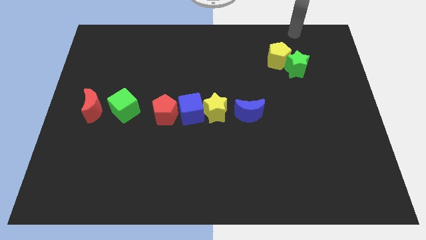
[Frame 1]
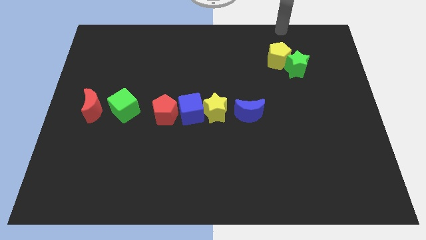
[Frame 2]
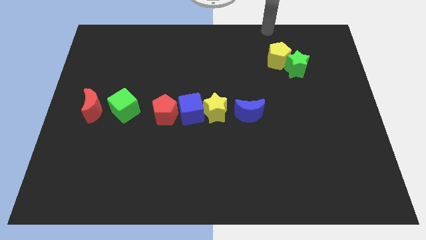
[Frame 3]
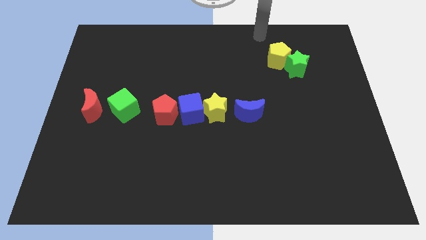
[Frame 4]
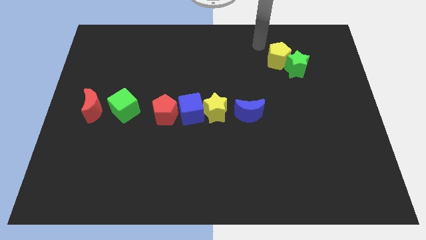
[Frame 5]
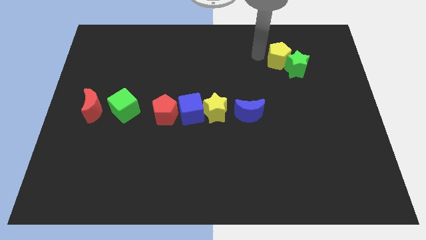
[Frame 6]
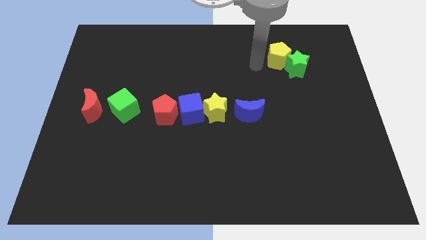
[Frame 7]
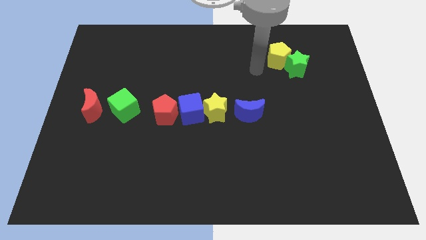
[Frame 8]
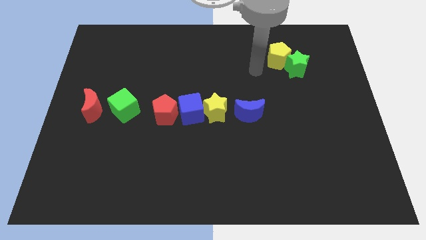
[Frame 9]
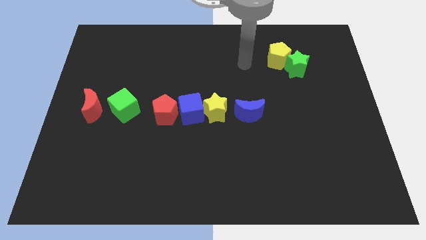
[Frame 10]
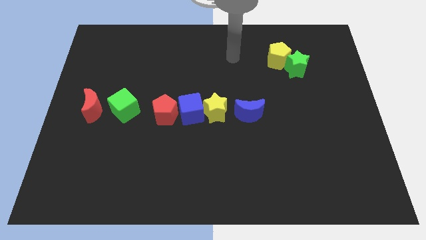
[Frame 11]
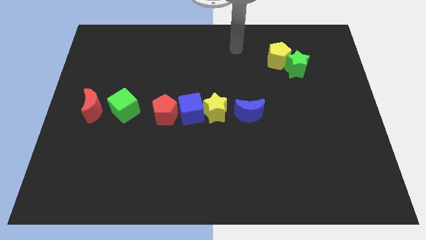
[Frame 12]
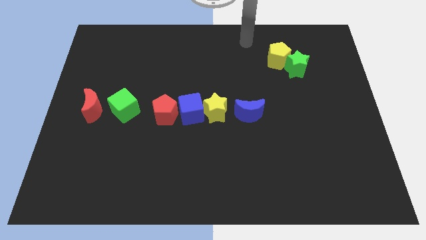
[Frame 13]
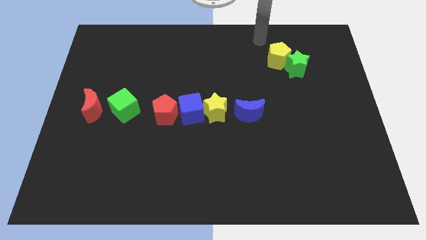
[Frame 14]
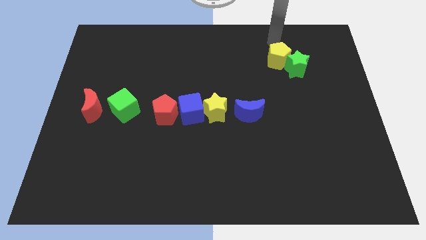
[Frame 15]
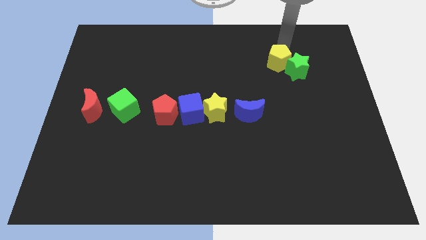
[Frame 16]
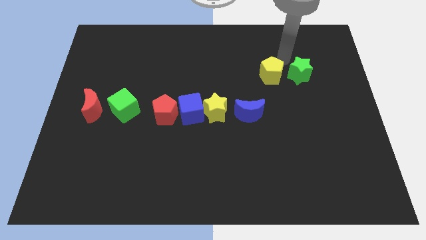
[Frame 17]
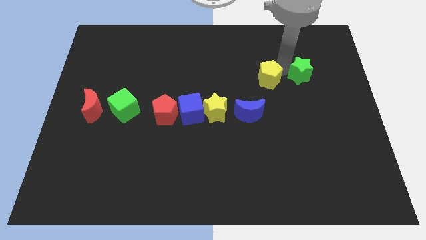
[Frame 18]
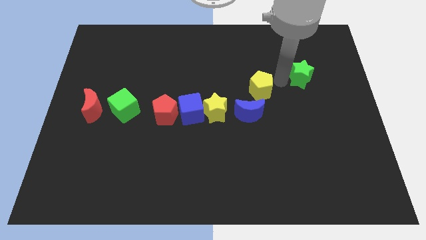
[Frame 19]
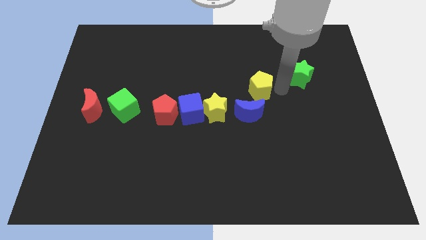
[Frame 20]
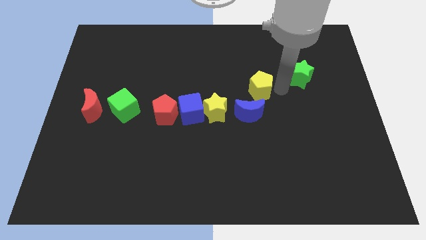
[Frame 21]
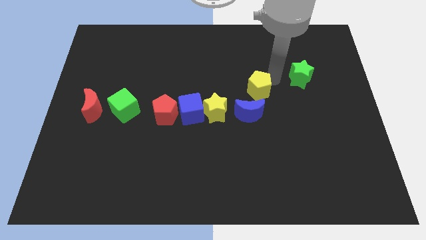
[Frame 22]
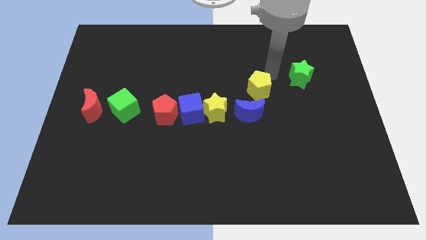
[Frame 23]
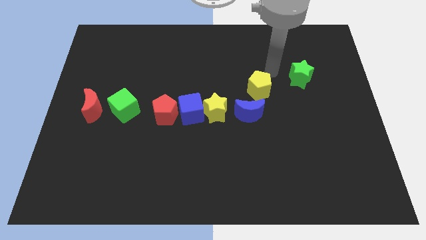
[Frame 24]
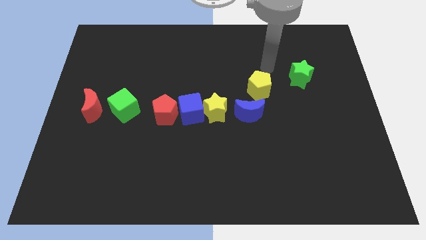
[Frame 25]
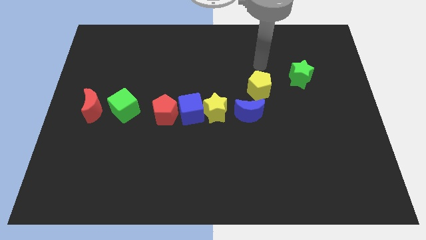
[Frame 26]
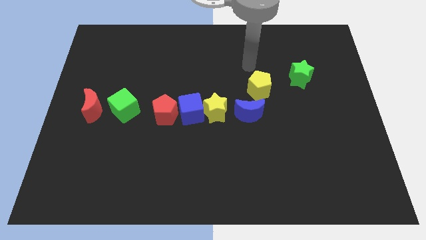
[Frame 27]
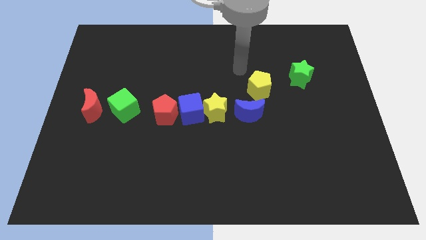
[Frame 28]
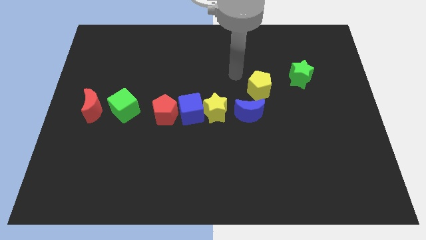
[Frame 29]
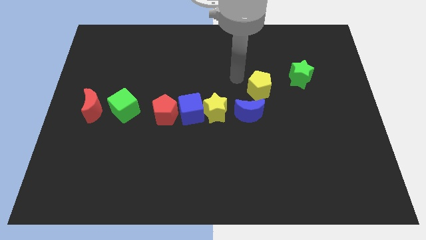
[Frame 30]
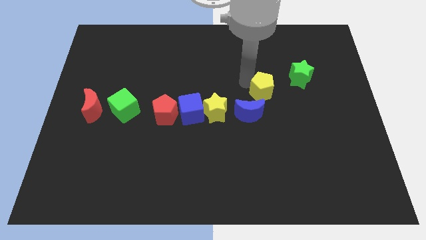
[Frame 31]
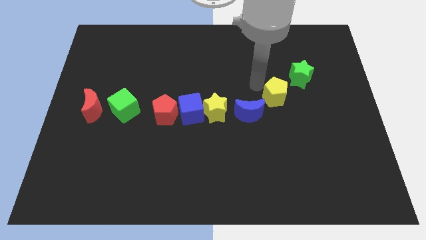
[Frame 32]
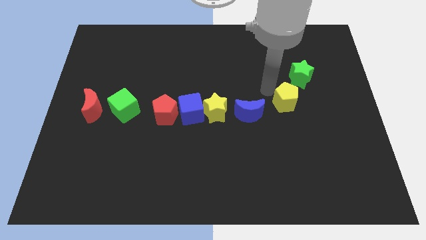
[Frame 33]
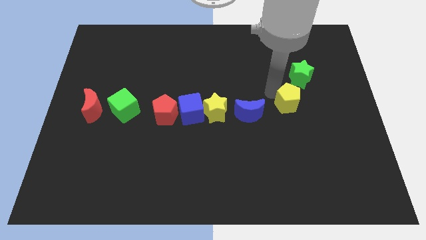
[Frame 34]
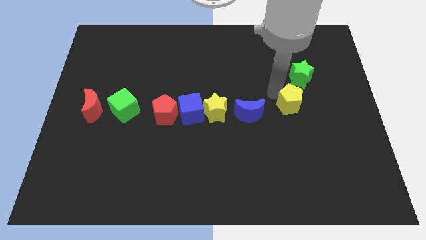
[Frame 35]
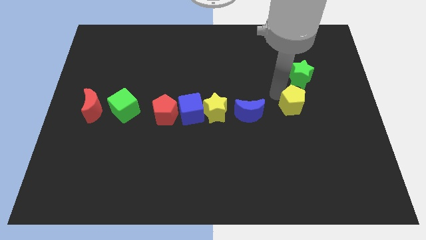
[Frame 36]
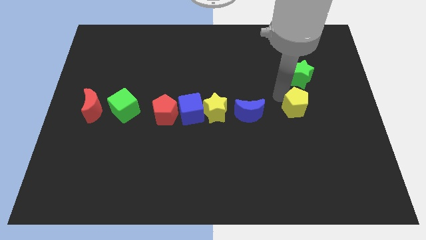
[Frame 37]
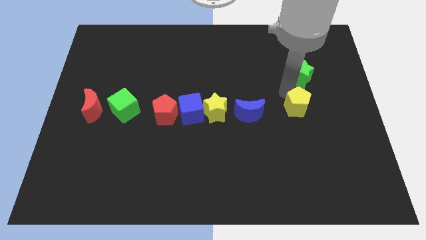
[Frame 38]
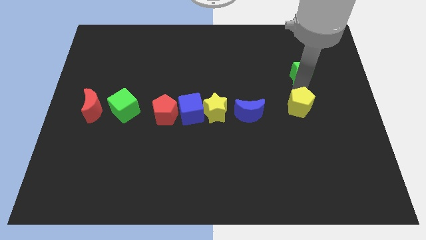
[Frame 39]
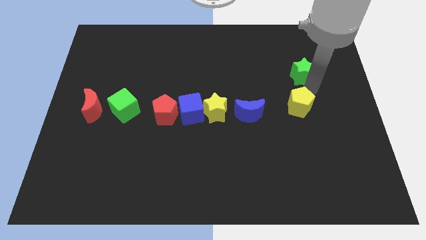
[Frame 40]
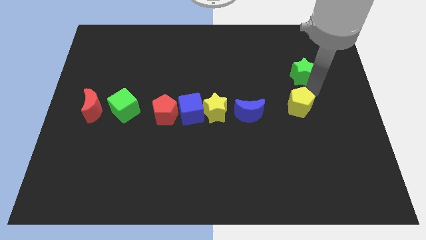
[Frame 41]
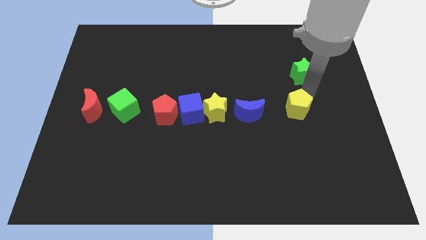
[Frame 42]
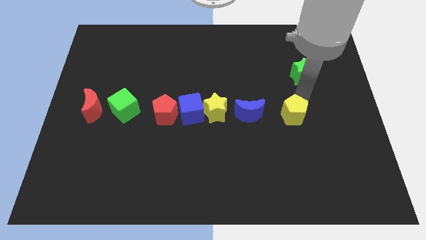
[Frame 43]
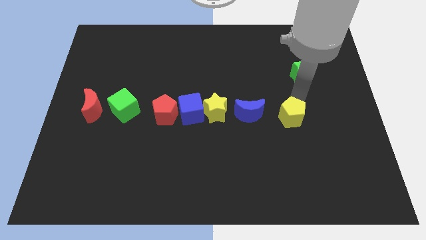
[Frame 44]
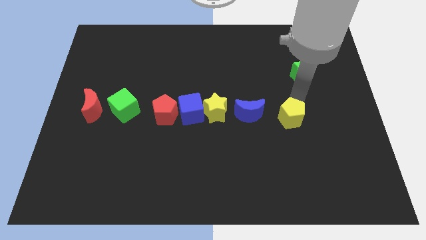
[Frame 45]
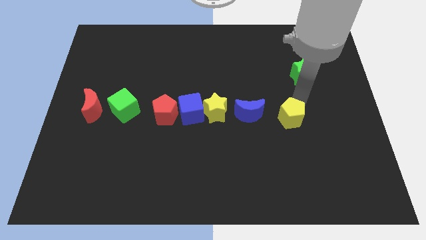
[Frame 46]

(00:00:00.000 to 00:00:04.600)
place the yellow pentagon to the right of the blue moon

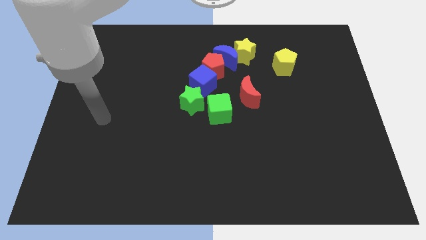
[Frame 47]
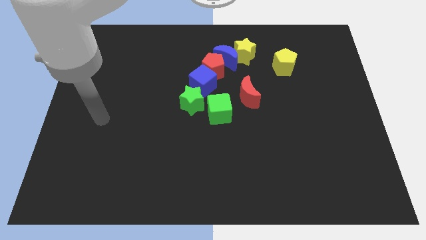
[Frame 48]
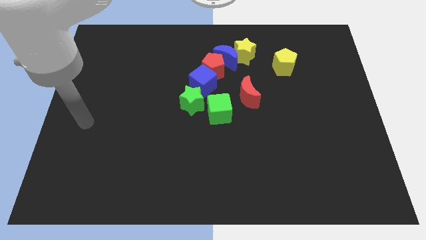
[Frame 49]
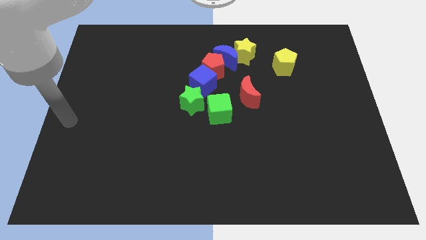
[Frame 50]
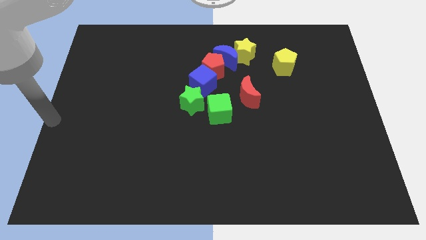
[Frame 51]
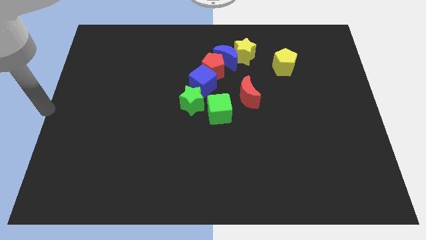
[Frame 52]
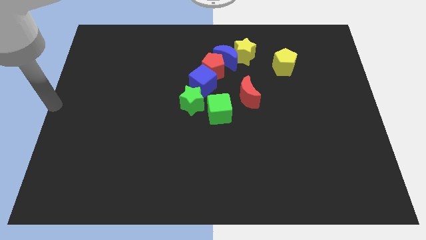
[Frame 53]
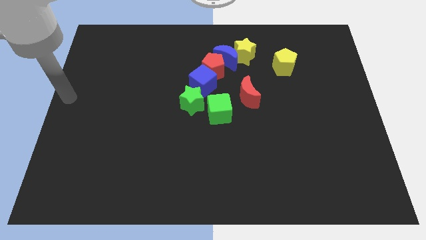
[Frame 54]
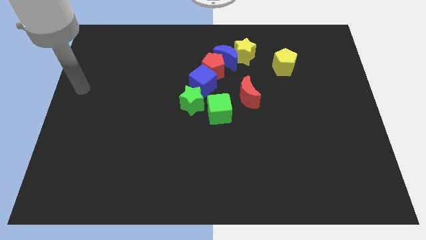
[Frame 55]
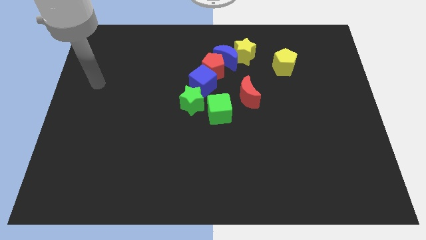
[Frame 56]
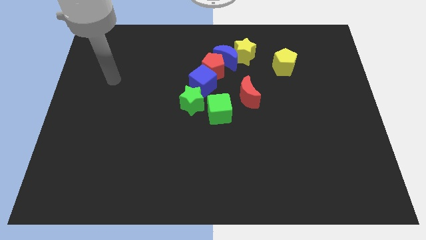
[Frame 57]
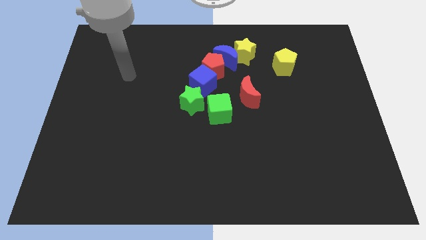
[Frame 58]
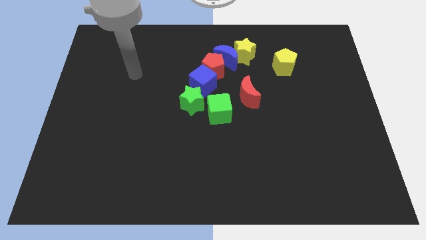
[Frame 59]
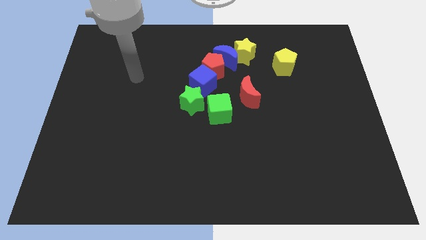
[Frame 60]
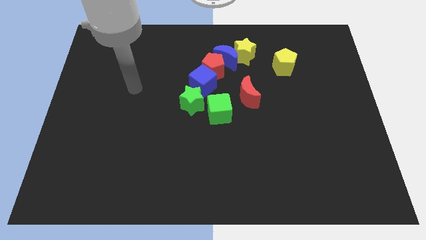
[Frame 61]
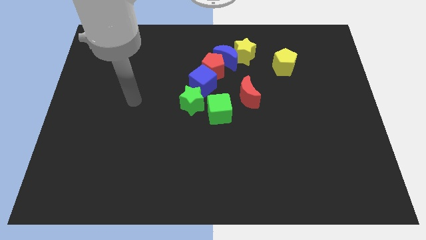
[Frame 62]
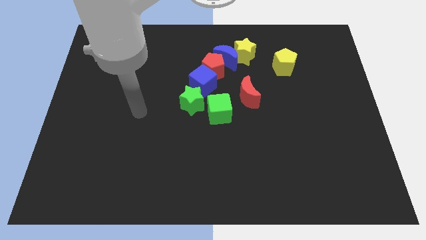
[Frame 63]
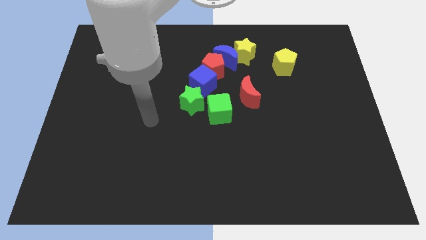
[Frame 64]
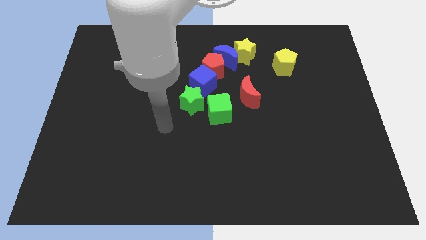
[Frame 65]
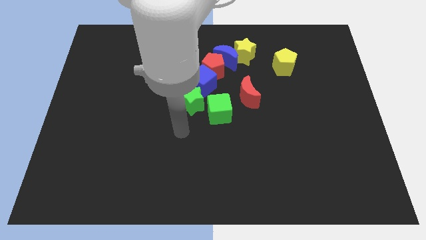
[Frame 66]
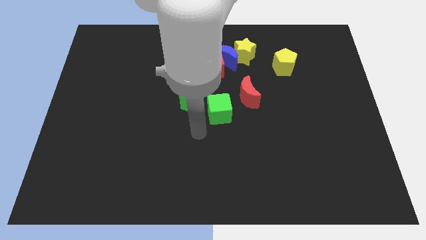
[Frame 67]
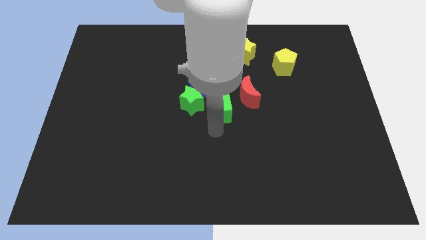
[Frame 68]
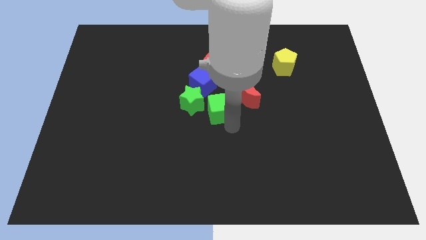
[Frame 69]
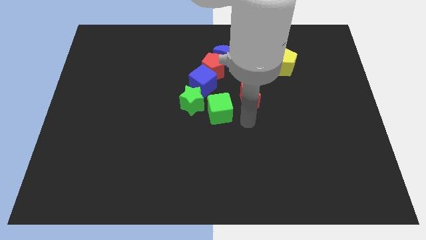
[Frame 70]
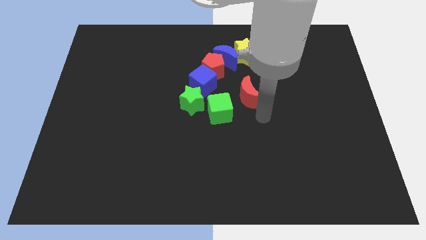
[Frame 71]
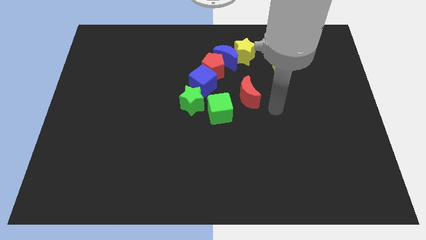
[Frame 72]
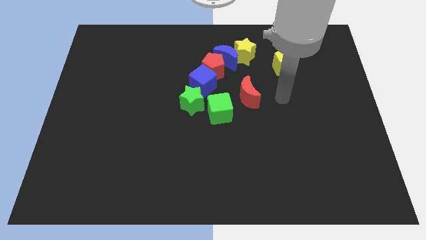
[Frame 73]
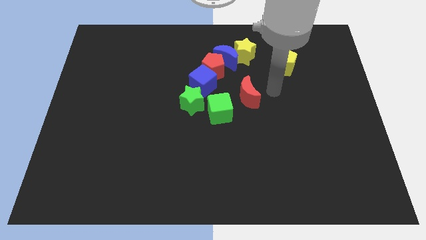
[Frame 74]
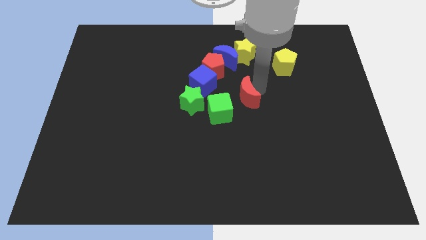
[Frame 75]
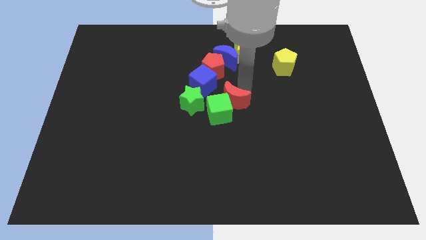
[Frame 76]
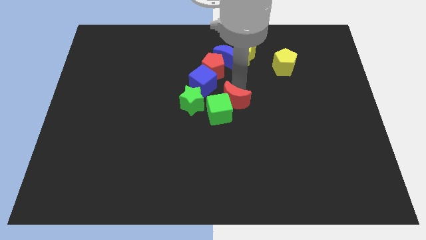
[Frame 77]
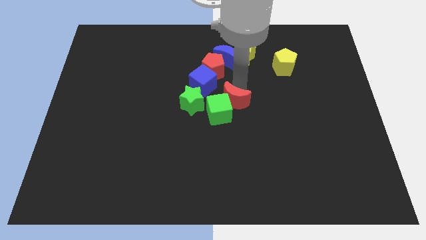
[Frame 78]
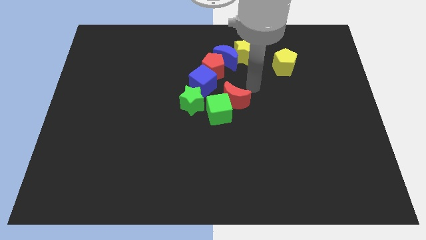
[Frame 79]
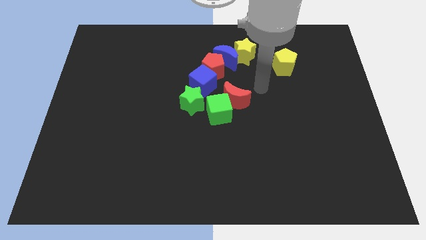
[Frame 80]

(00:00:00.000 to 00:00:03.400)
push red moon into the green cube

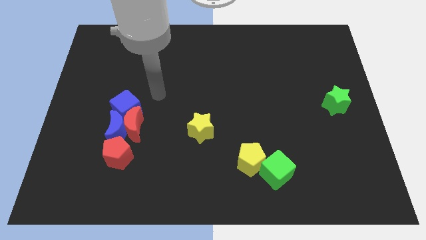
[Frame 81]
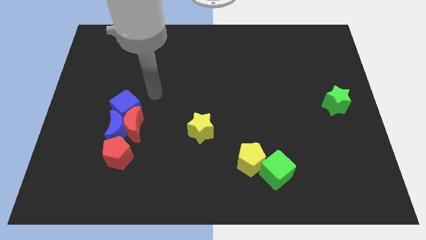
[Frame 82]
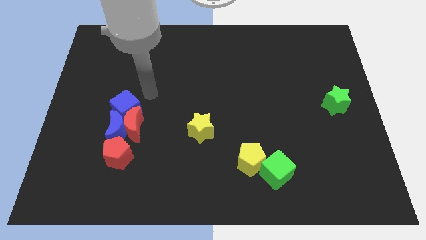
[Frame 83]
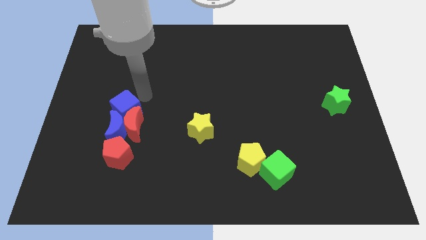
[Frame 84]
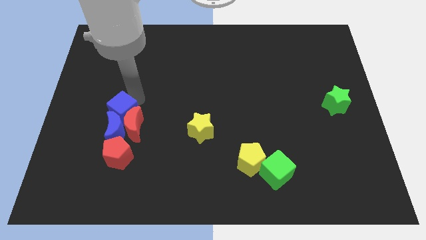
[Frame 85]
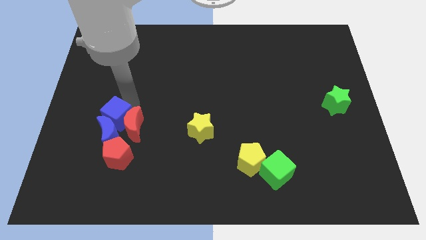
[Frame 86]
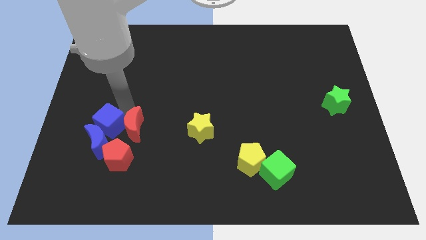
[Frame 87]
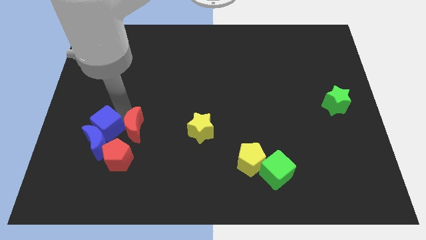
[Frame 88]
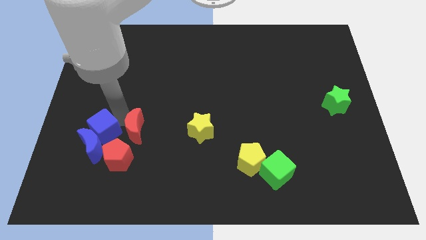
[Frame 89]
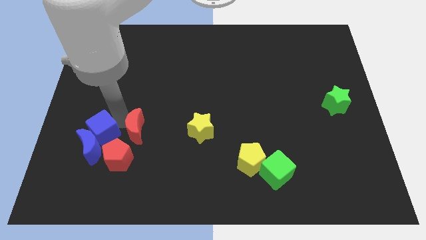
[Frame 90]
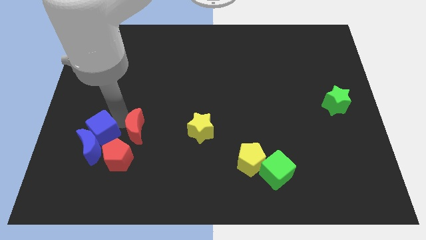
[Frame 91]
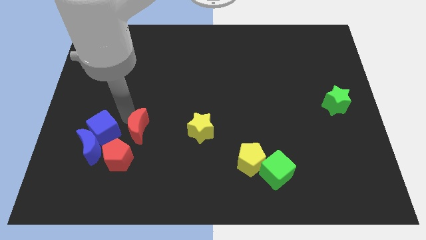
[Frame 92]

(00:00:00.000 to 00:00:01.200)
push the blue cube into the blue crescent

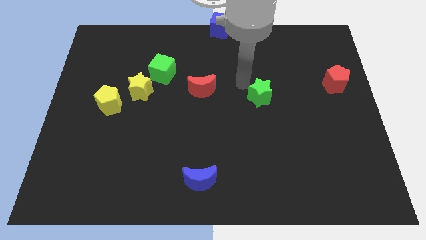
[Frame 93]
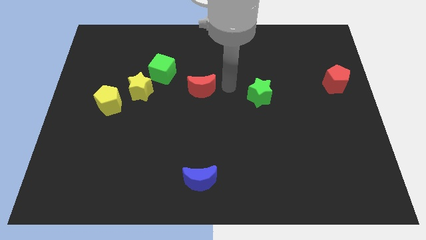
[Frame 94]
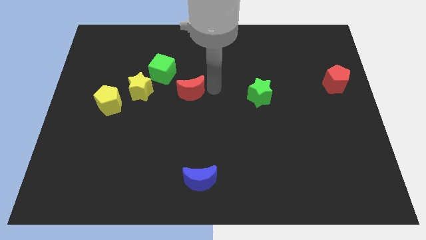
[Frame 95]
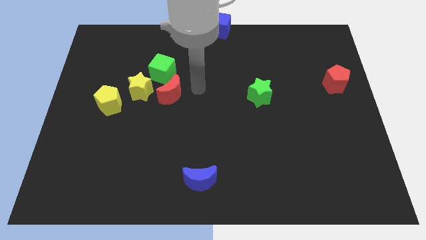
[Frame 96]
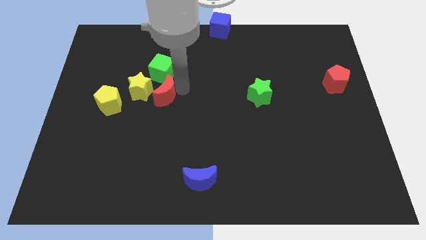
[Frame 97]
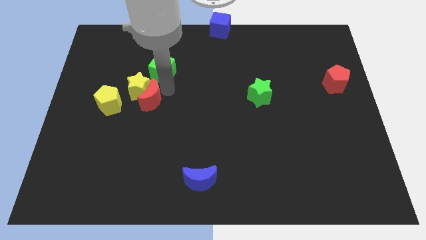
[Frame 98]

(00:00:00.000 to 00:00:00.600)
push the red crescent into yellow star
